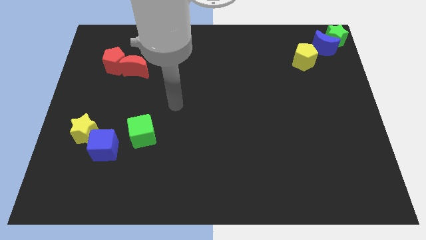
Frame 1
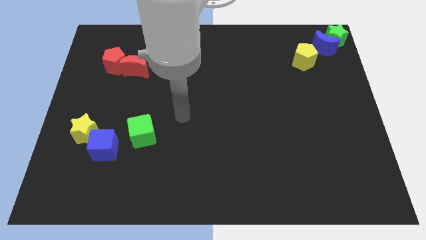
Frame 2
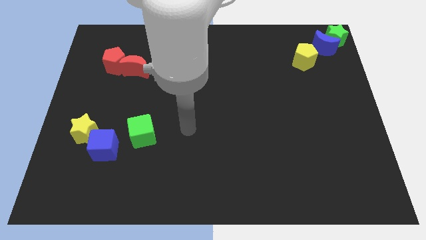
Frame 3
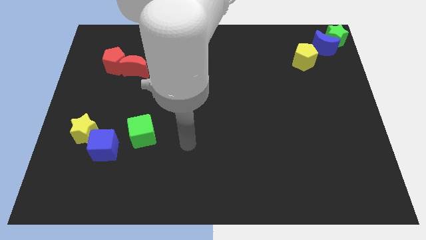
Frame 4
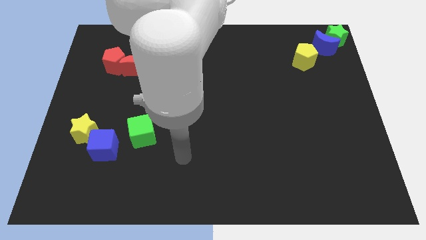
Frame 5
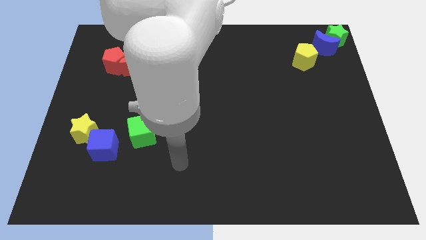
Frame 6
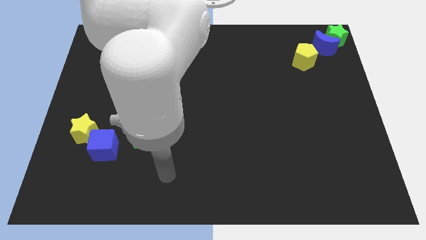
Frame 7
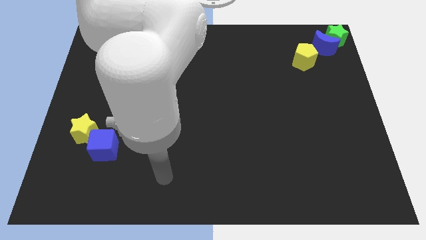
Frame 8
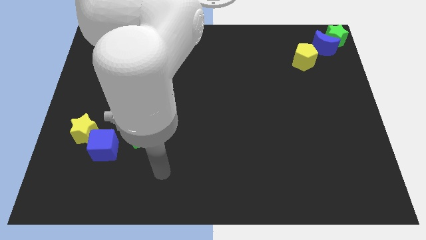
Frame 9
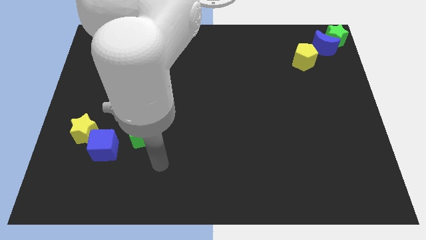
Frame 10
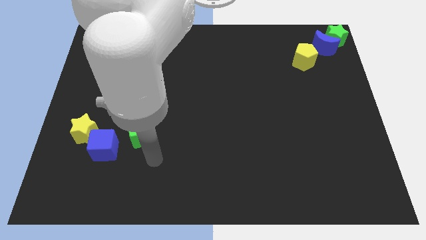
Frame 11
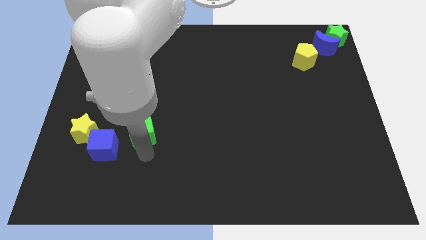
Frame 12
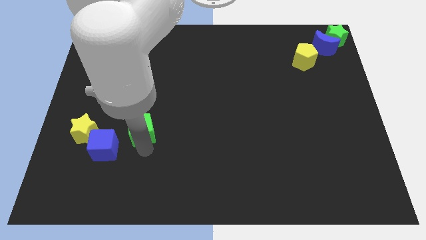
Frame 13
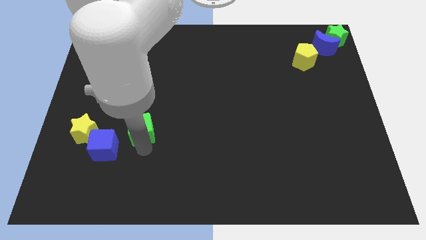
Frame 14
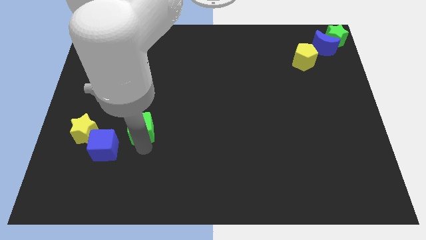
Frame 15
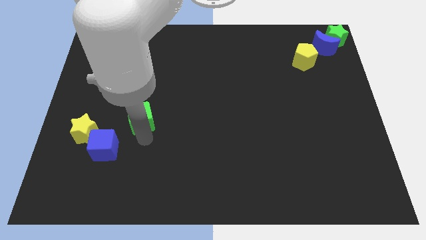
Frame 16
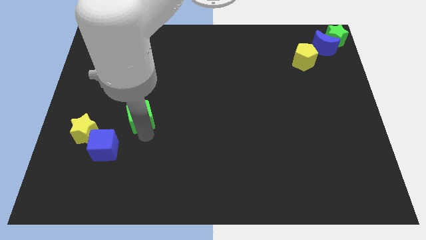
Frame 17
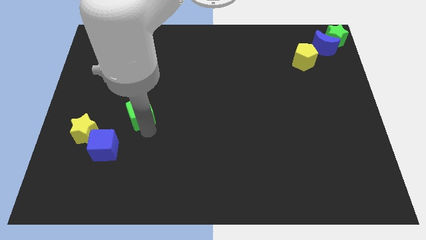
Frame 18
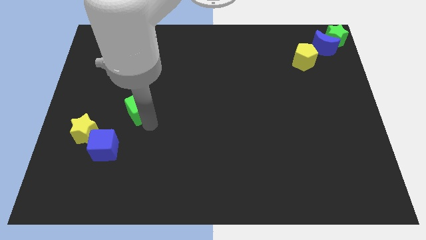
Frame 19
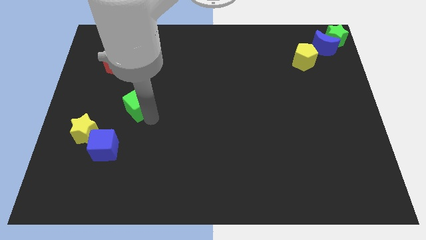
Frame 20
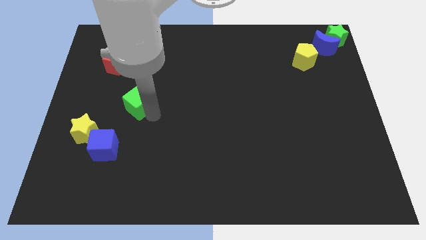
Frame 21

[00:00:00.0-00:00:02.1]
place the green cube below the red moon

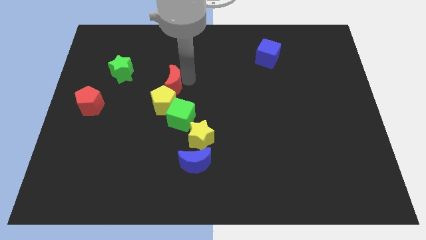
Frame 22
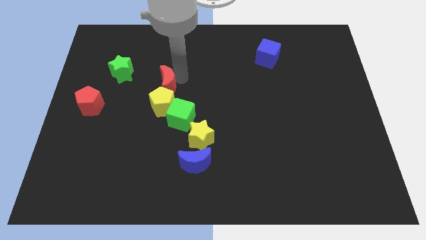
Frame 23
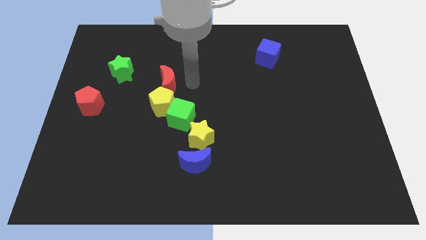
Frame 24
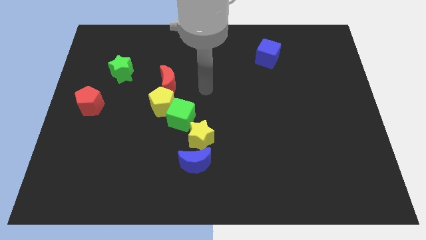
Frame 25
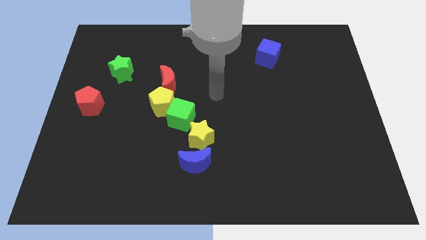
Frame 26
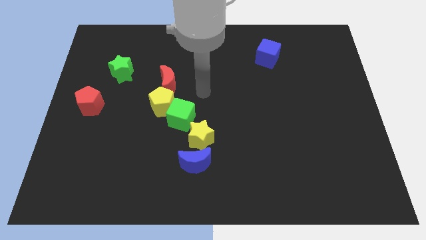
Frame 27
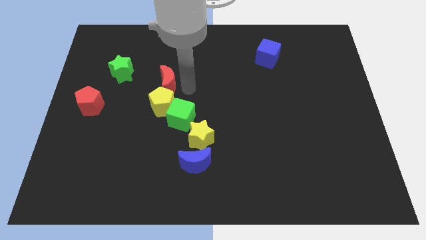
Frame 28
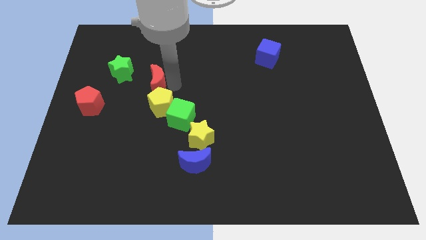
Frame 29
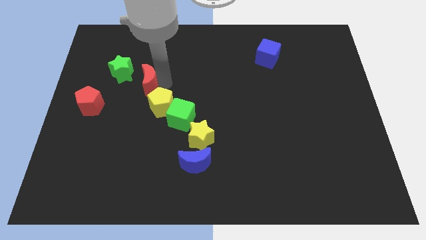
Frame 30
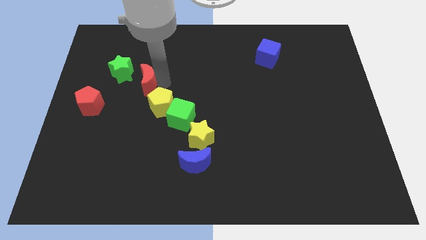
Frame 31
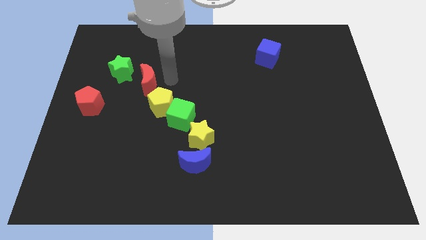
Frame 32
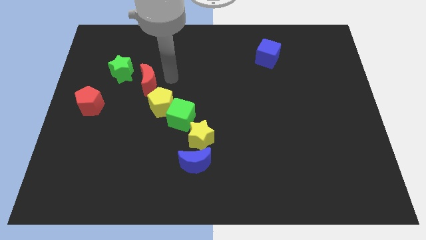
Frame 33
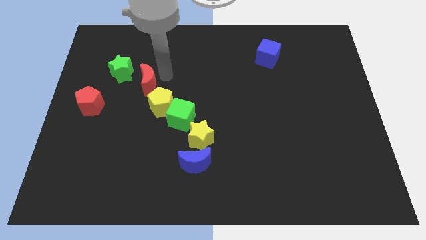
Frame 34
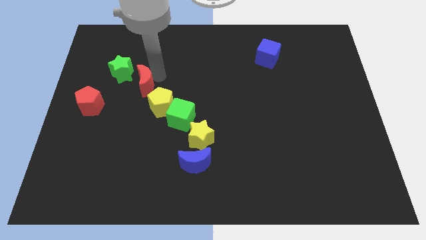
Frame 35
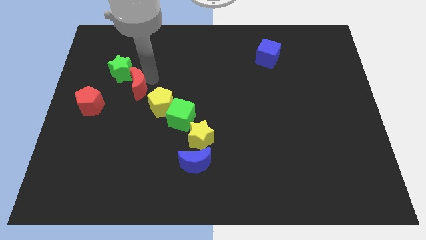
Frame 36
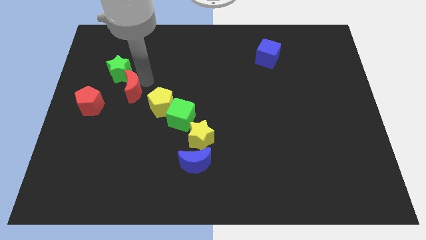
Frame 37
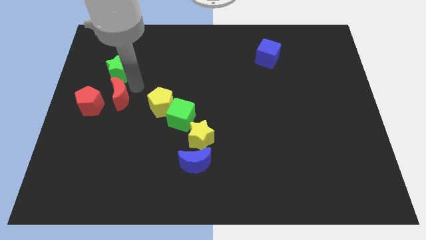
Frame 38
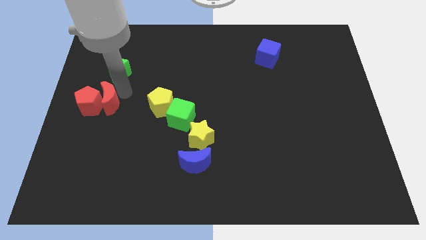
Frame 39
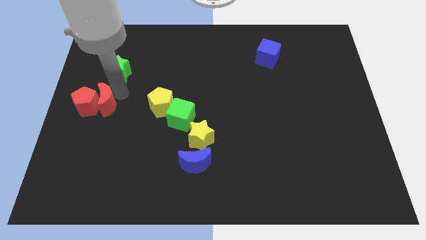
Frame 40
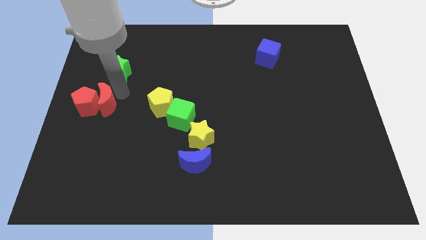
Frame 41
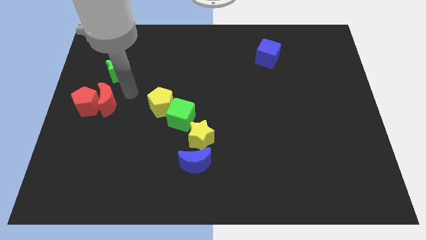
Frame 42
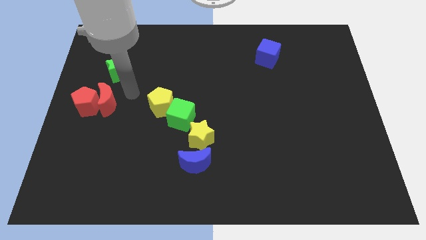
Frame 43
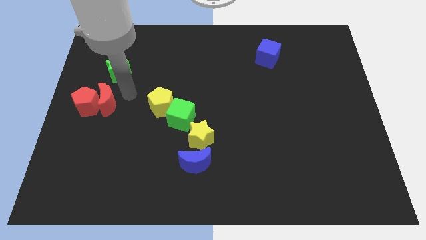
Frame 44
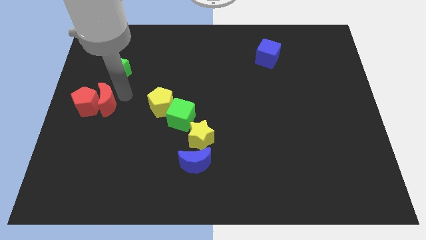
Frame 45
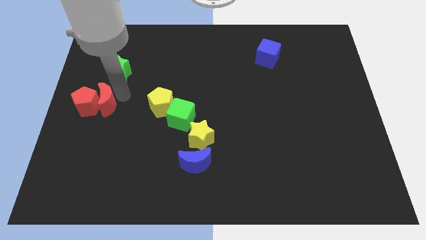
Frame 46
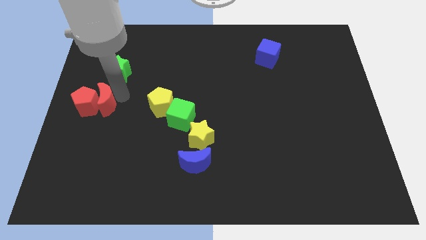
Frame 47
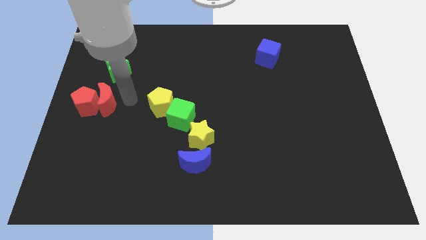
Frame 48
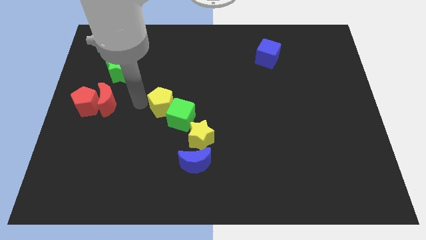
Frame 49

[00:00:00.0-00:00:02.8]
push the red moon into red pentagon

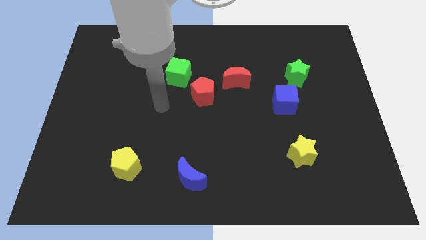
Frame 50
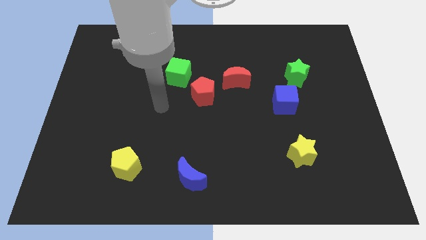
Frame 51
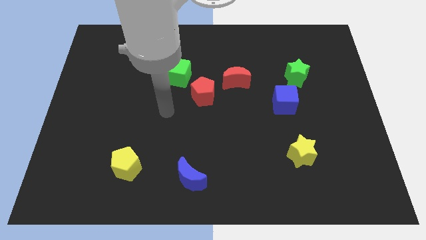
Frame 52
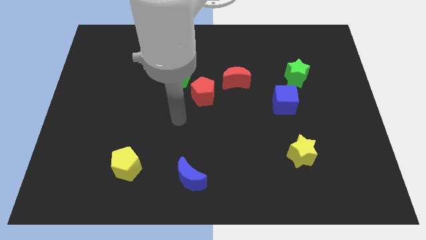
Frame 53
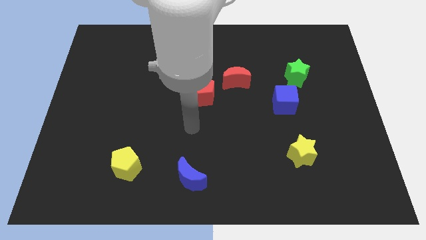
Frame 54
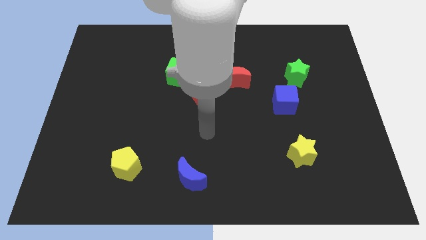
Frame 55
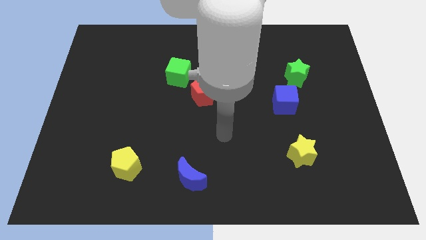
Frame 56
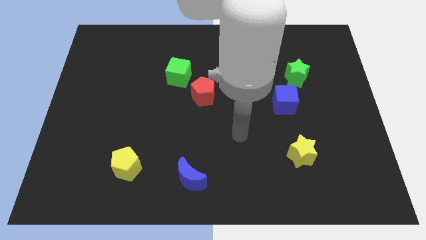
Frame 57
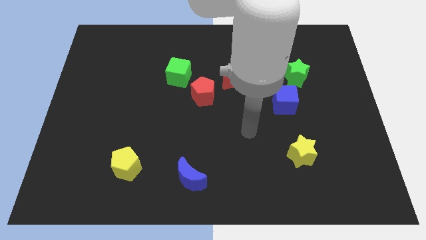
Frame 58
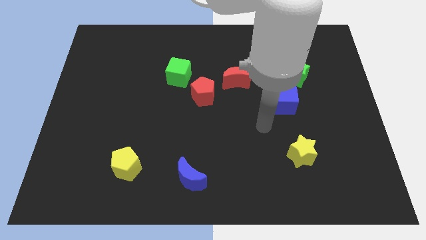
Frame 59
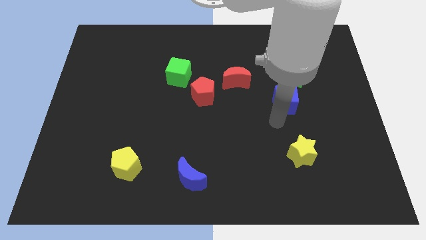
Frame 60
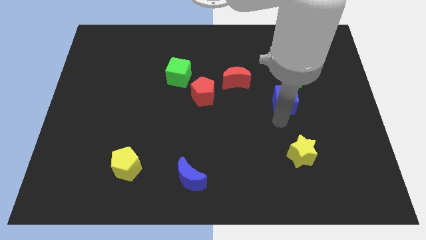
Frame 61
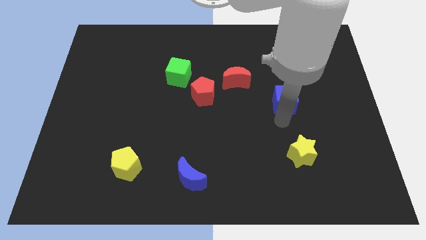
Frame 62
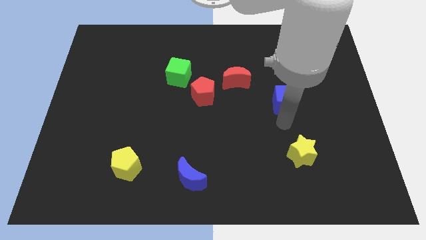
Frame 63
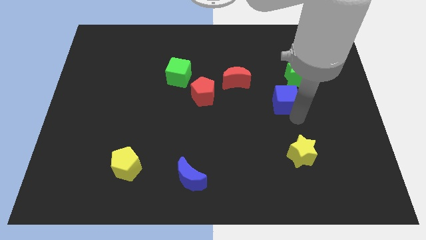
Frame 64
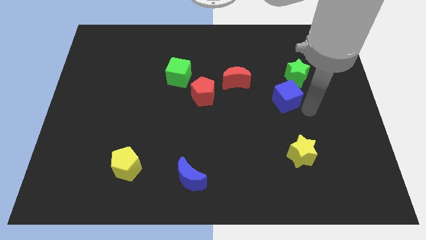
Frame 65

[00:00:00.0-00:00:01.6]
go and tap the blue cube

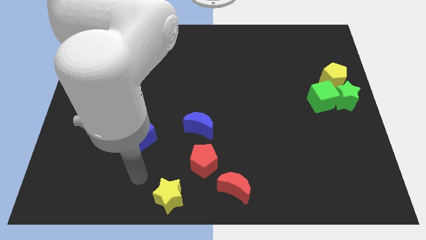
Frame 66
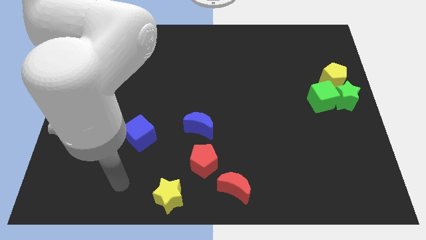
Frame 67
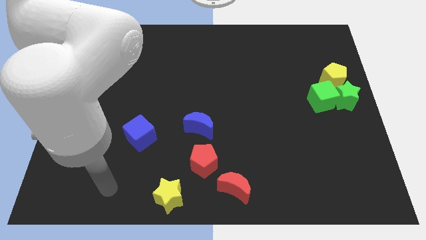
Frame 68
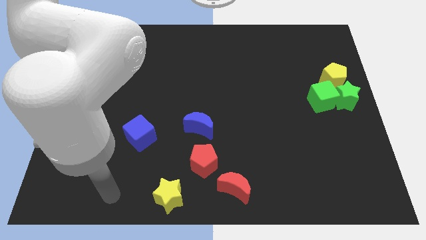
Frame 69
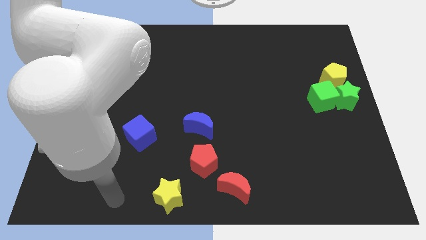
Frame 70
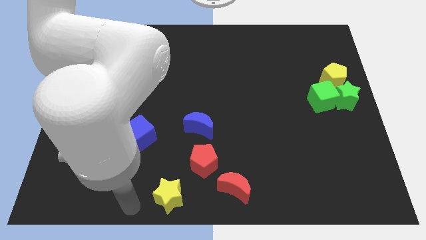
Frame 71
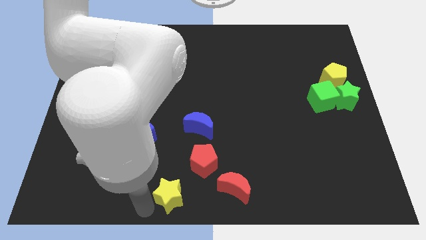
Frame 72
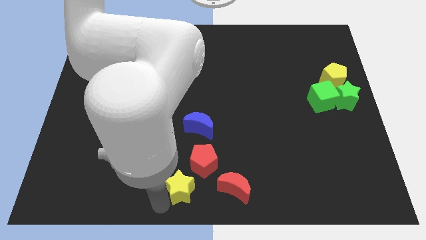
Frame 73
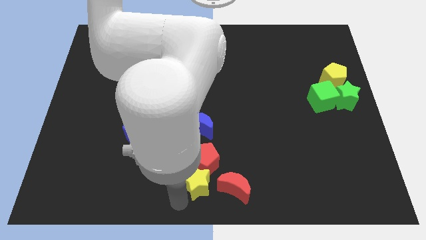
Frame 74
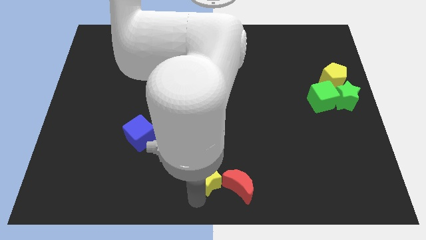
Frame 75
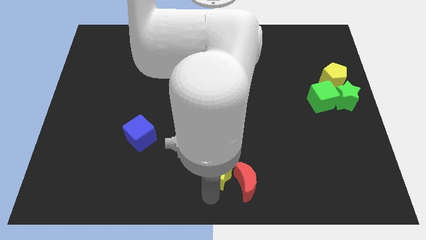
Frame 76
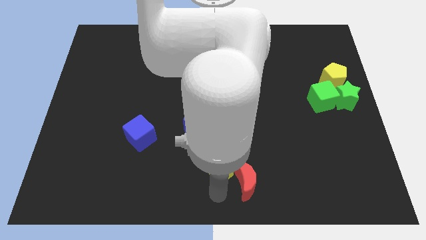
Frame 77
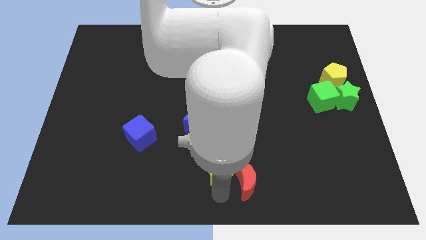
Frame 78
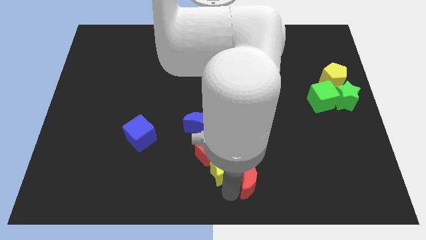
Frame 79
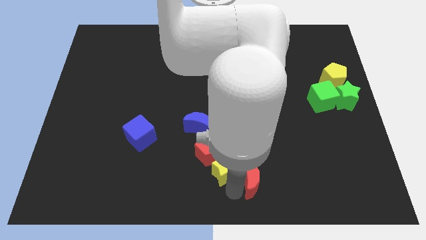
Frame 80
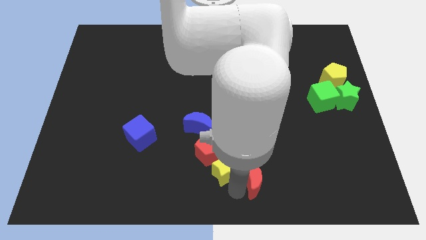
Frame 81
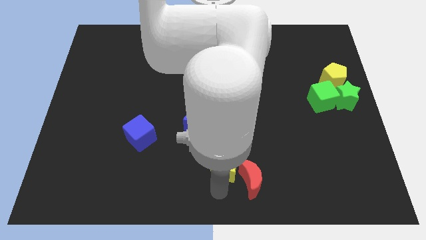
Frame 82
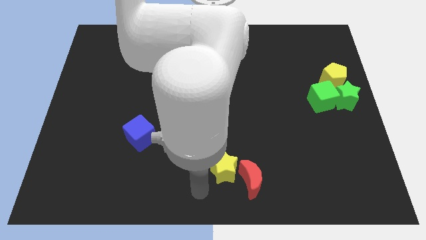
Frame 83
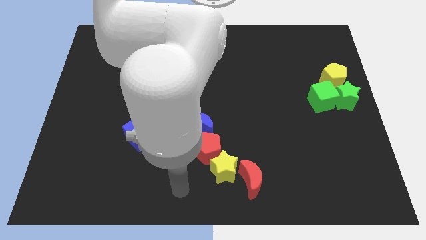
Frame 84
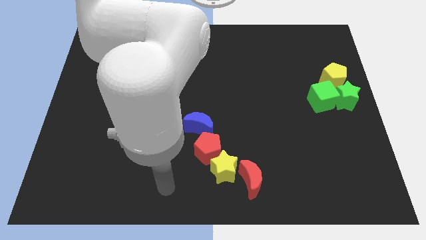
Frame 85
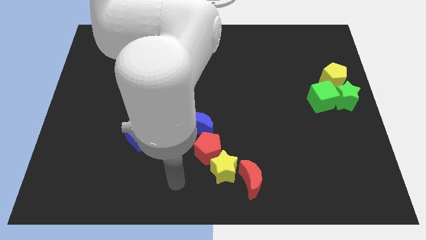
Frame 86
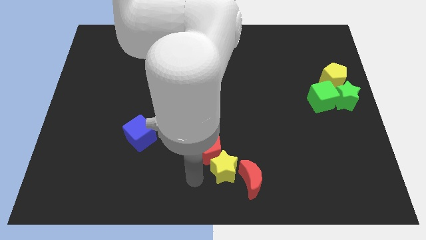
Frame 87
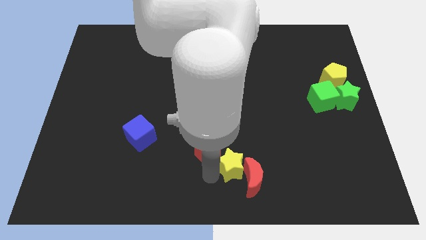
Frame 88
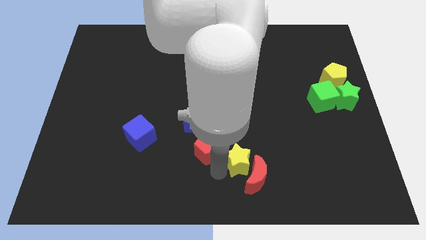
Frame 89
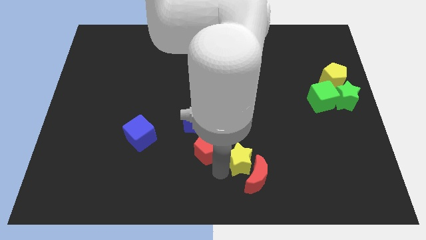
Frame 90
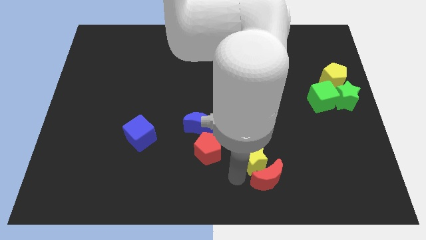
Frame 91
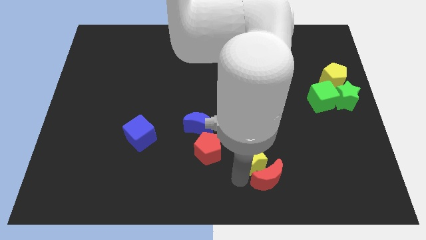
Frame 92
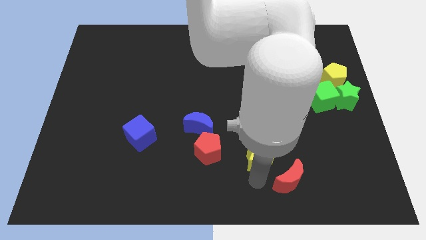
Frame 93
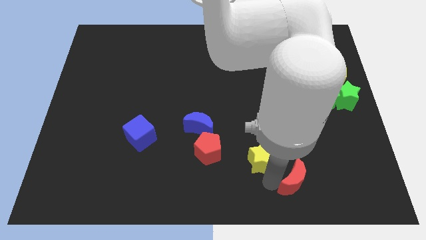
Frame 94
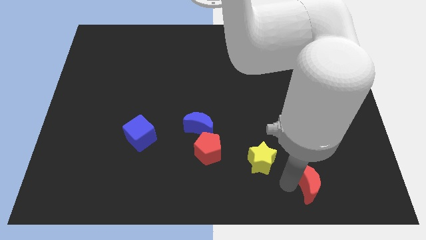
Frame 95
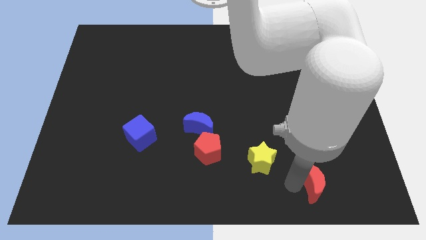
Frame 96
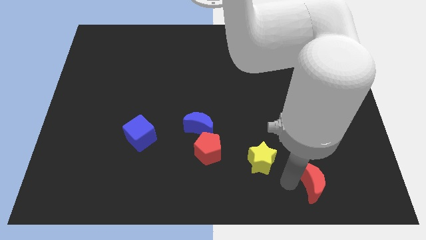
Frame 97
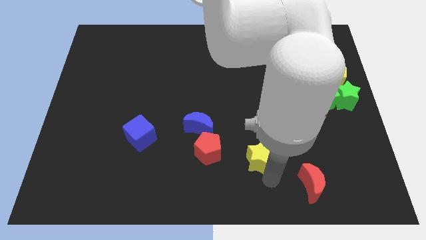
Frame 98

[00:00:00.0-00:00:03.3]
form a diagonal line with red blocks and the yellow star
